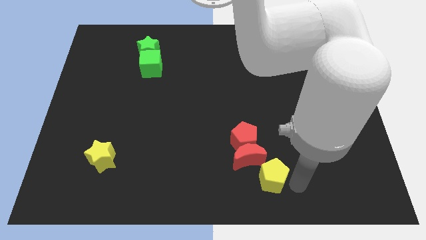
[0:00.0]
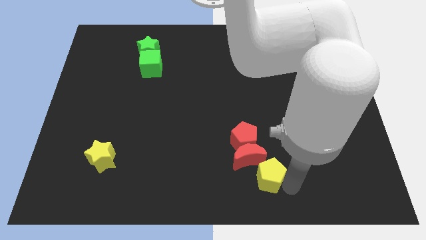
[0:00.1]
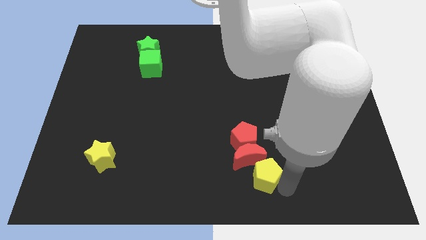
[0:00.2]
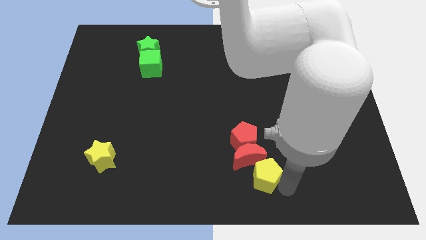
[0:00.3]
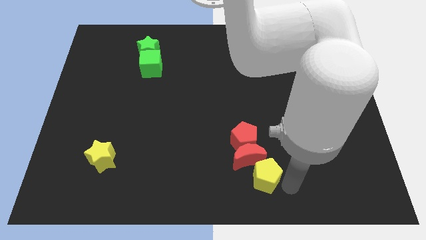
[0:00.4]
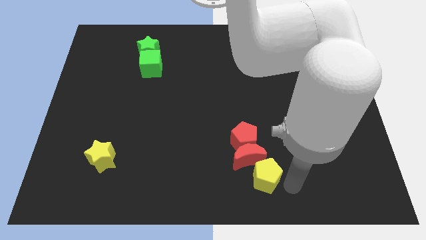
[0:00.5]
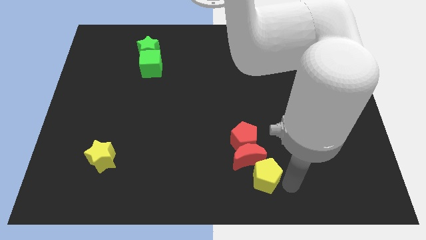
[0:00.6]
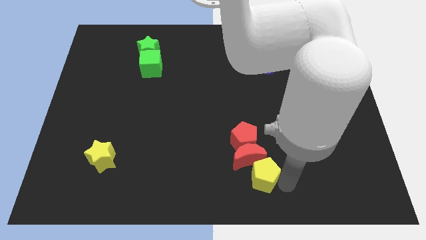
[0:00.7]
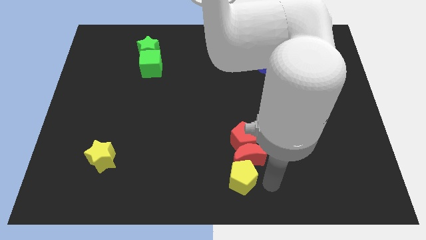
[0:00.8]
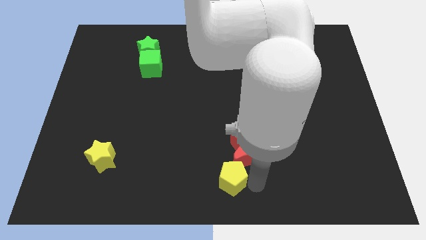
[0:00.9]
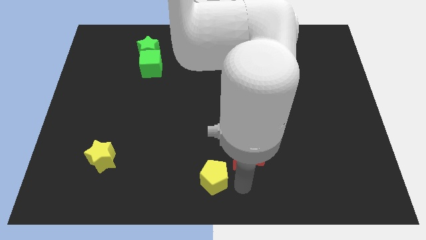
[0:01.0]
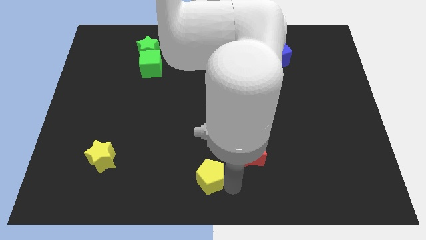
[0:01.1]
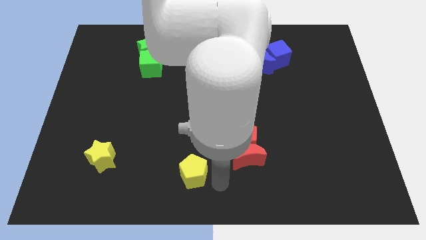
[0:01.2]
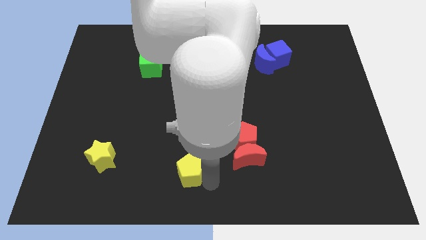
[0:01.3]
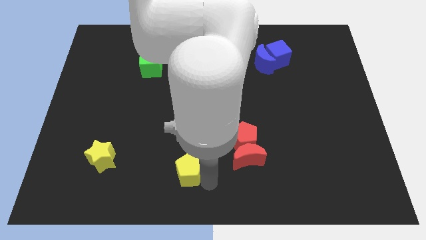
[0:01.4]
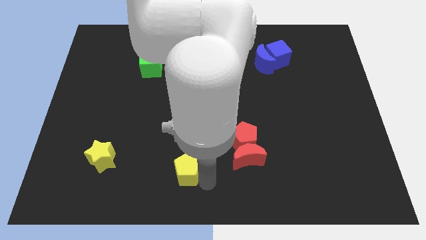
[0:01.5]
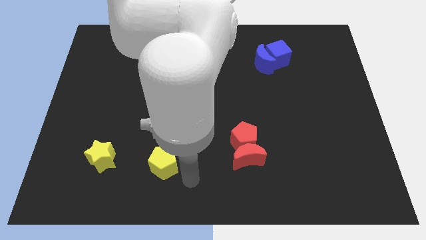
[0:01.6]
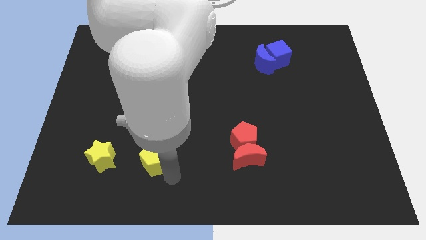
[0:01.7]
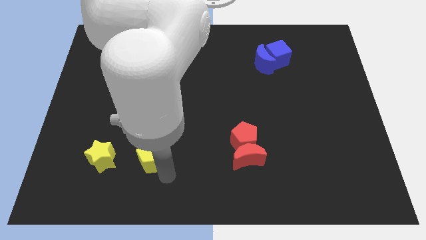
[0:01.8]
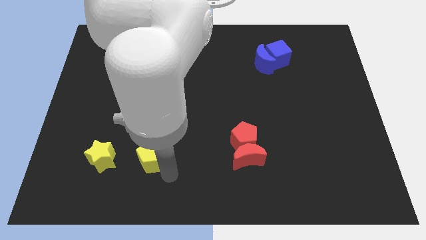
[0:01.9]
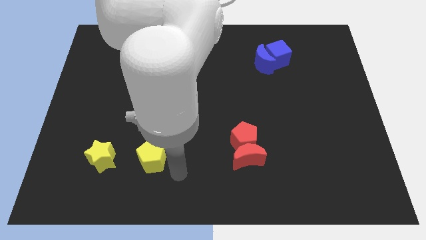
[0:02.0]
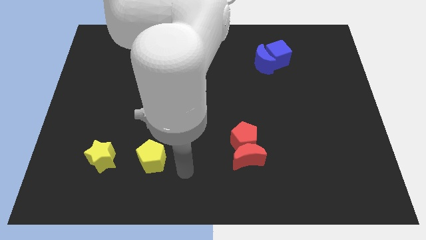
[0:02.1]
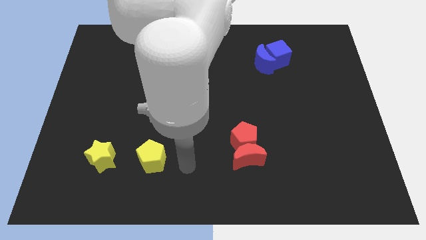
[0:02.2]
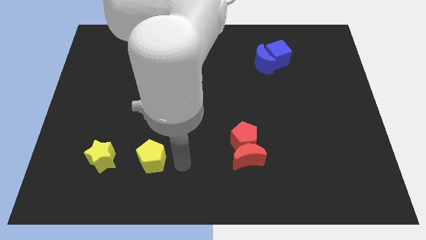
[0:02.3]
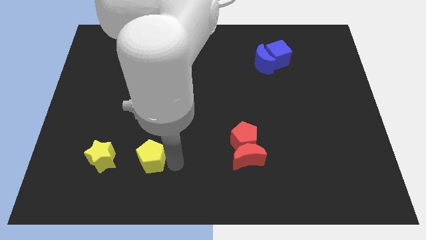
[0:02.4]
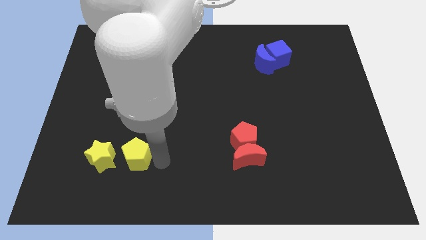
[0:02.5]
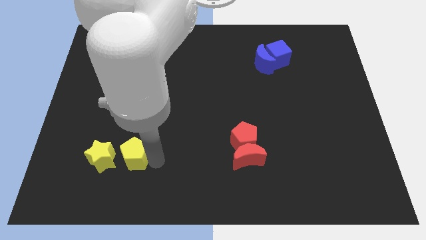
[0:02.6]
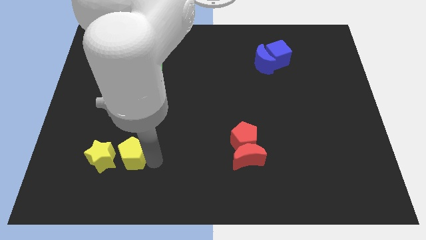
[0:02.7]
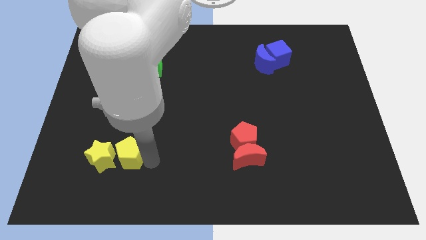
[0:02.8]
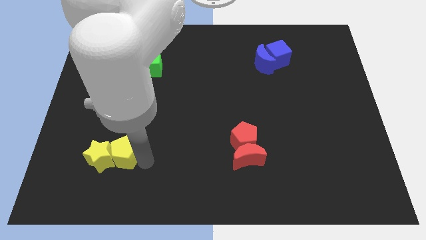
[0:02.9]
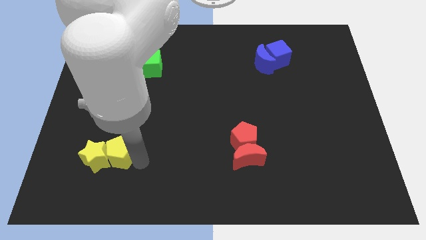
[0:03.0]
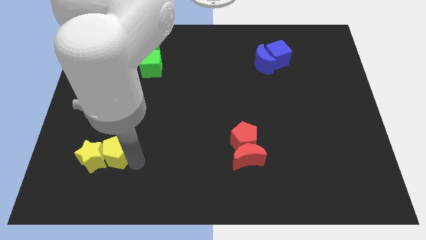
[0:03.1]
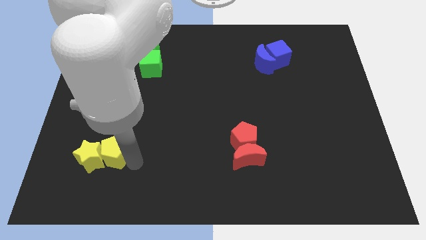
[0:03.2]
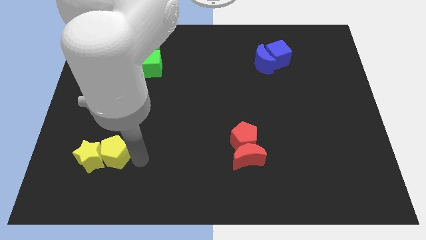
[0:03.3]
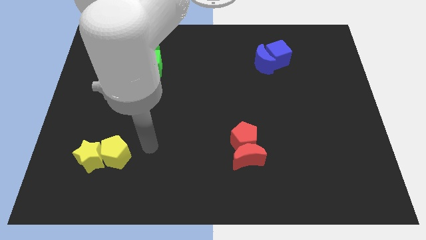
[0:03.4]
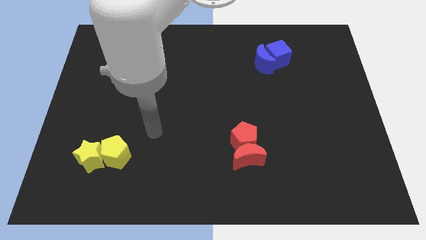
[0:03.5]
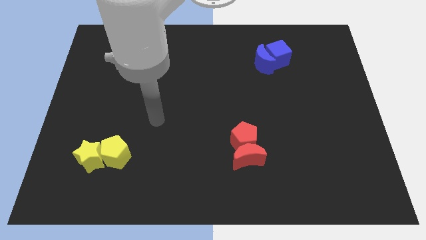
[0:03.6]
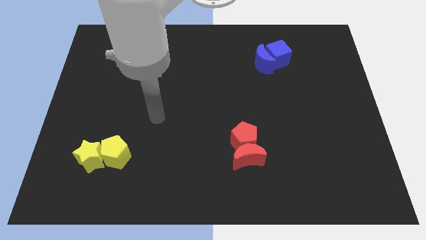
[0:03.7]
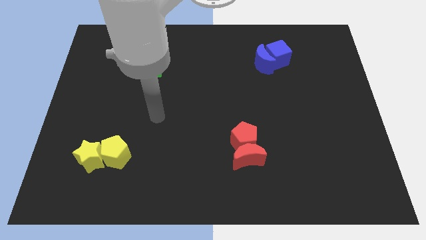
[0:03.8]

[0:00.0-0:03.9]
push the ywllow pentagon to the right side of the yellow star

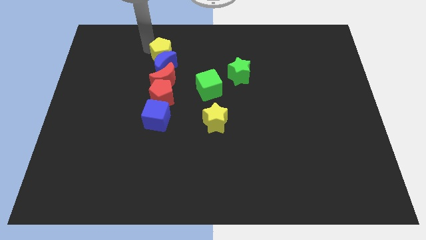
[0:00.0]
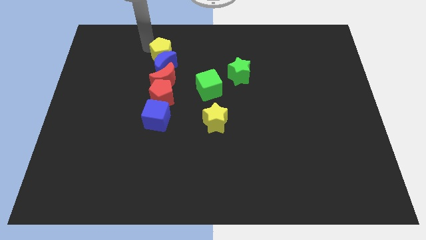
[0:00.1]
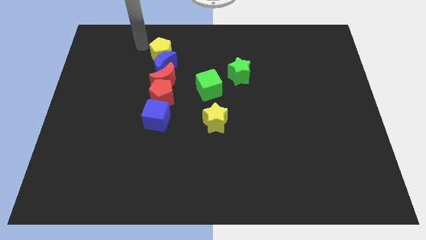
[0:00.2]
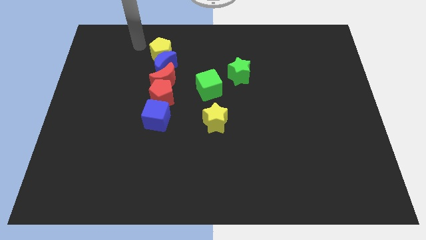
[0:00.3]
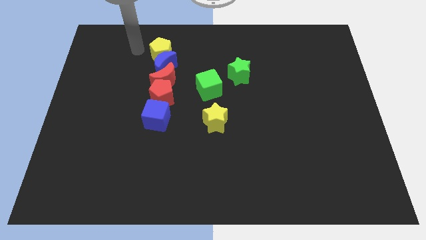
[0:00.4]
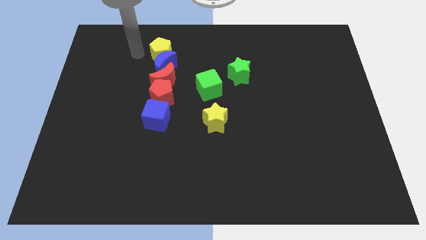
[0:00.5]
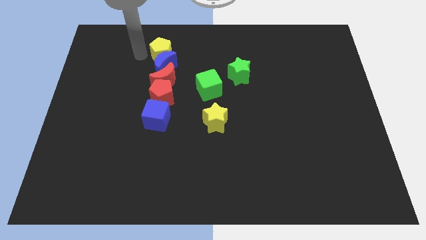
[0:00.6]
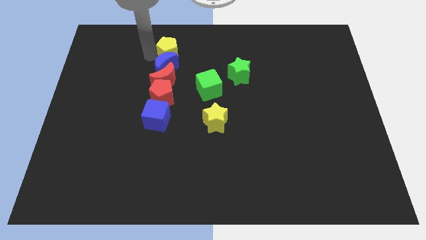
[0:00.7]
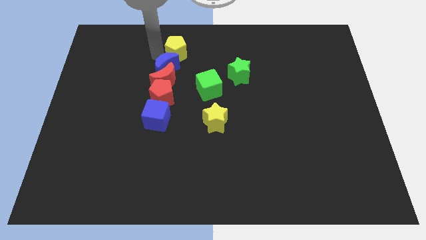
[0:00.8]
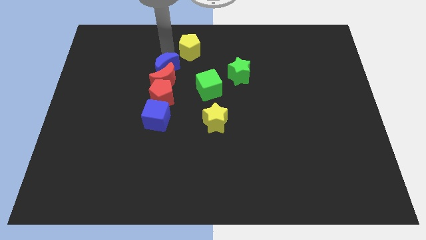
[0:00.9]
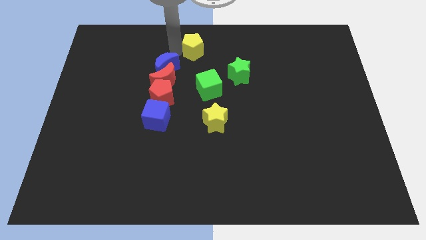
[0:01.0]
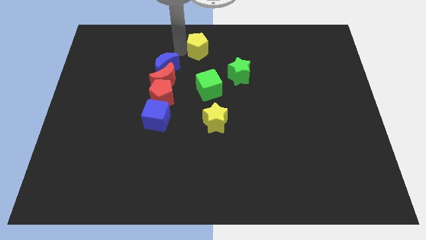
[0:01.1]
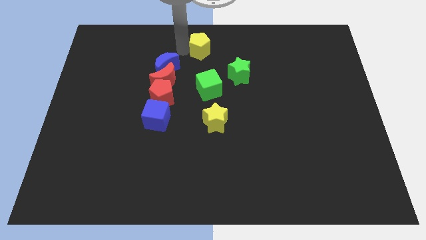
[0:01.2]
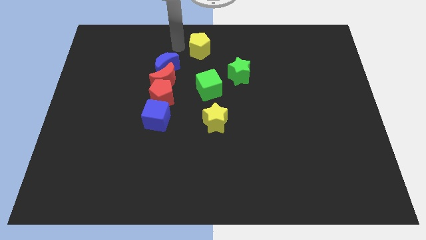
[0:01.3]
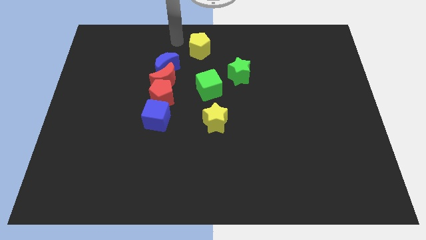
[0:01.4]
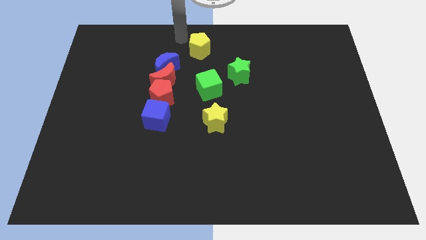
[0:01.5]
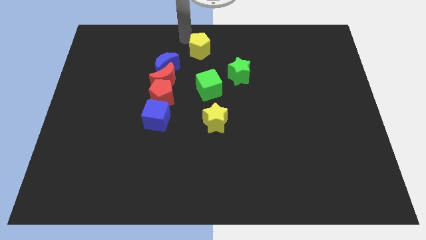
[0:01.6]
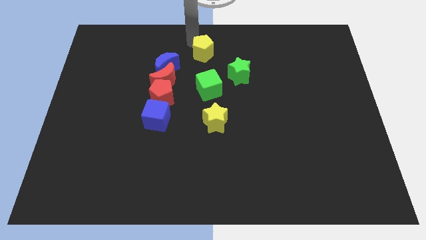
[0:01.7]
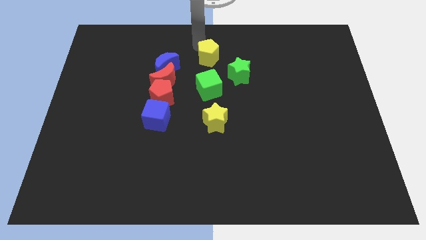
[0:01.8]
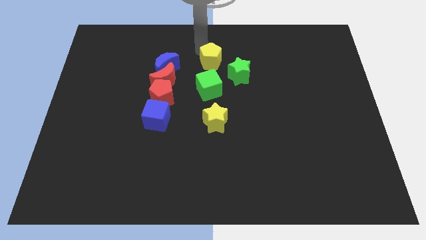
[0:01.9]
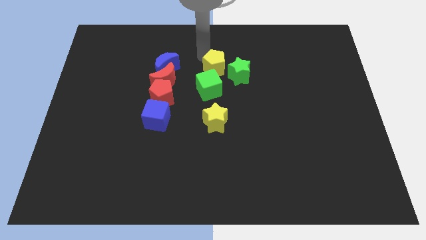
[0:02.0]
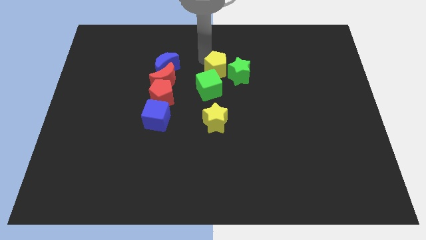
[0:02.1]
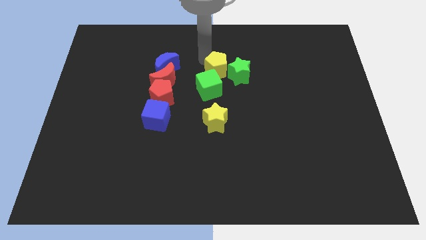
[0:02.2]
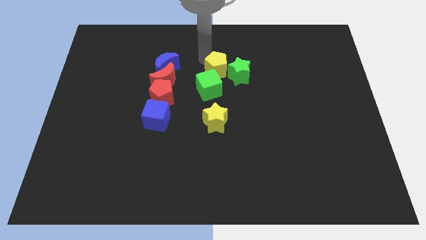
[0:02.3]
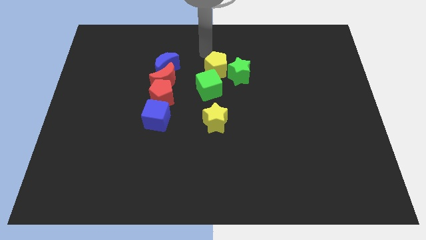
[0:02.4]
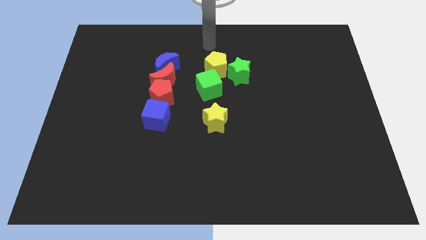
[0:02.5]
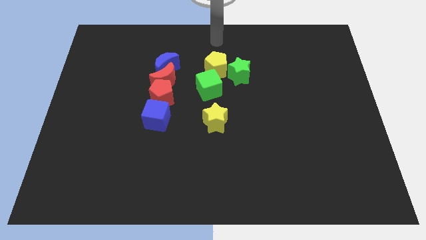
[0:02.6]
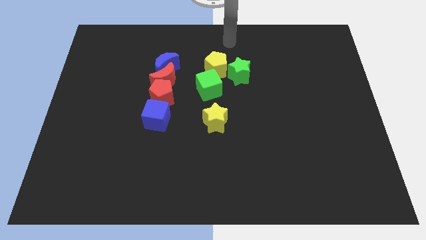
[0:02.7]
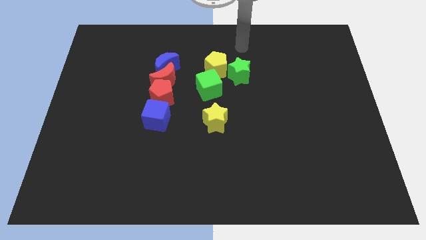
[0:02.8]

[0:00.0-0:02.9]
place the yellow pentagon near the green cube

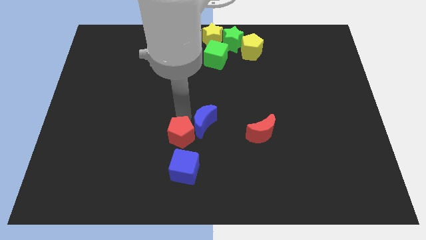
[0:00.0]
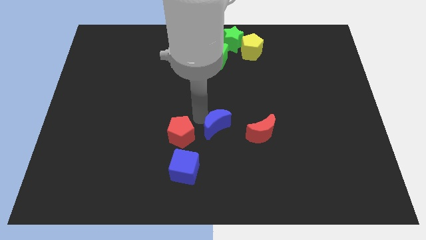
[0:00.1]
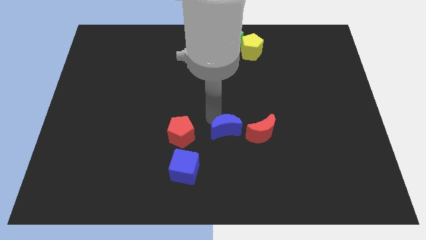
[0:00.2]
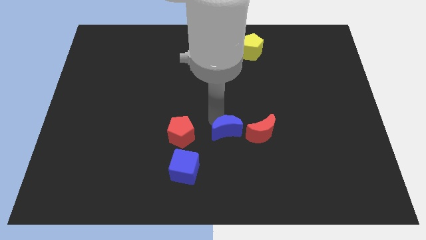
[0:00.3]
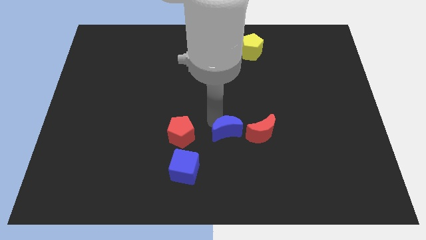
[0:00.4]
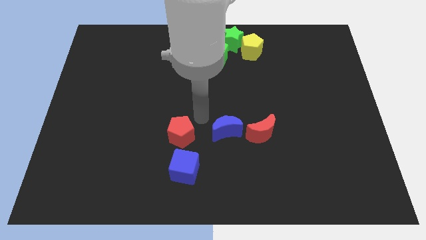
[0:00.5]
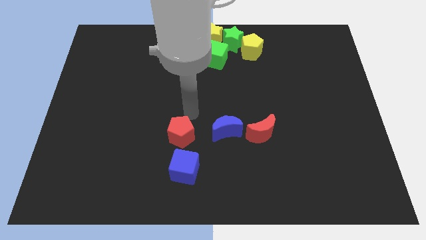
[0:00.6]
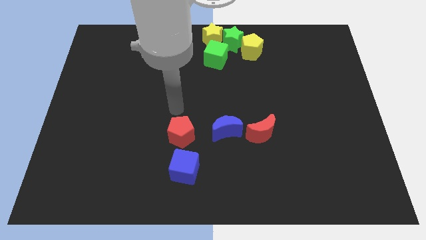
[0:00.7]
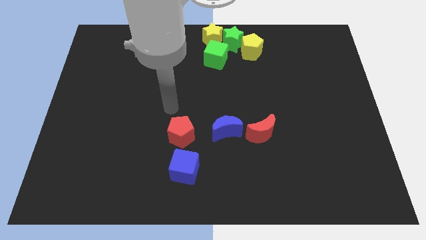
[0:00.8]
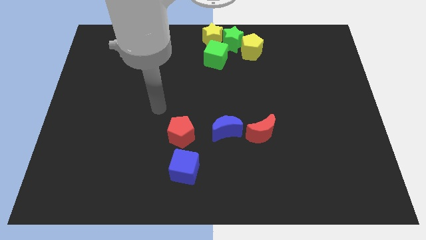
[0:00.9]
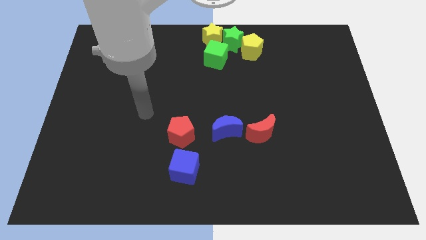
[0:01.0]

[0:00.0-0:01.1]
move the blue crescent to the left of the red crescent

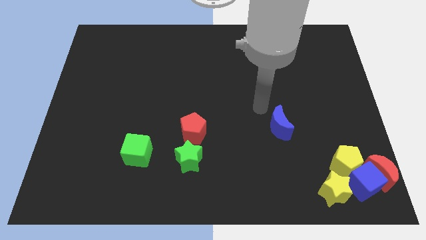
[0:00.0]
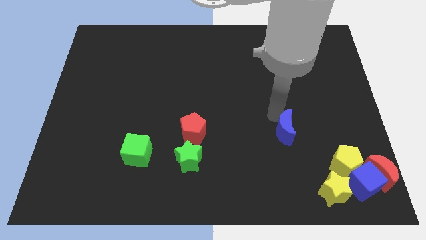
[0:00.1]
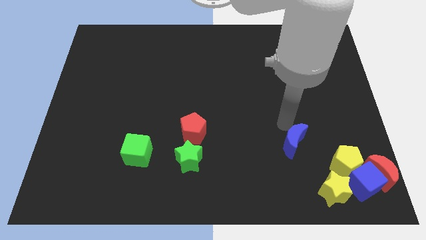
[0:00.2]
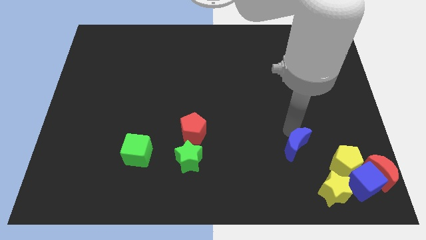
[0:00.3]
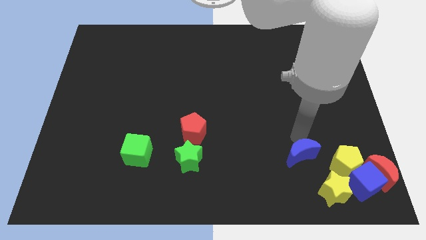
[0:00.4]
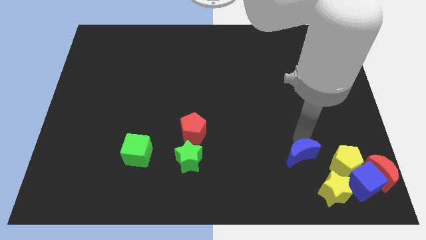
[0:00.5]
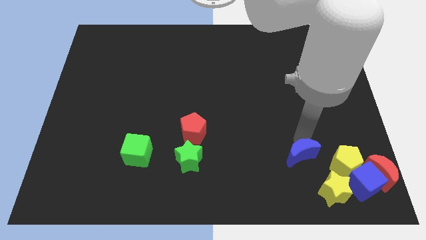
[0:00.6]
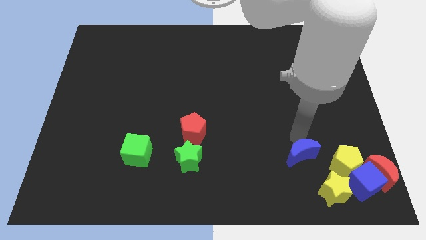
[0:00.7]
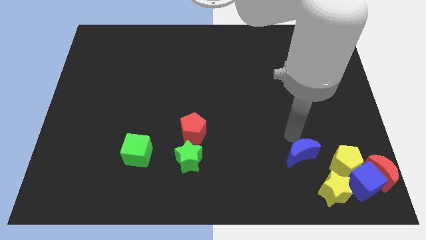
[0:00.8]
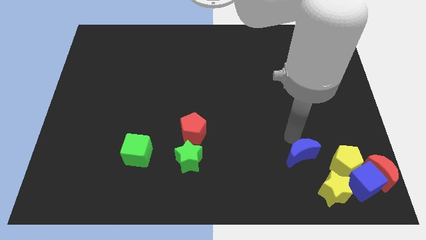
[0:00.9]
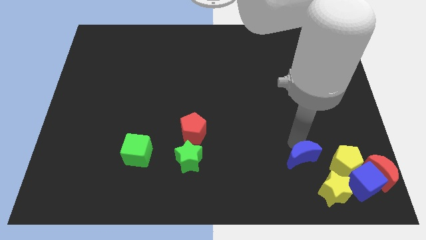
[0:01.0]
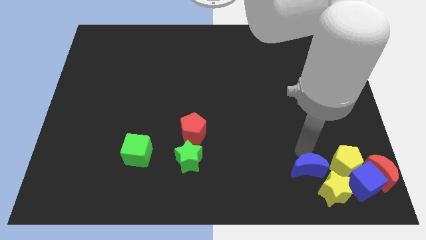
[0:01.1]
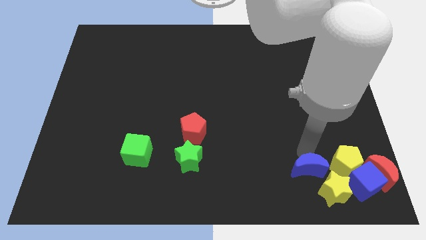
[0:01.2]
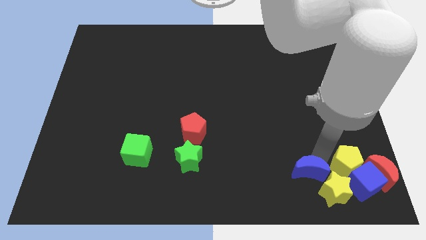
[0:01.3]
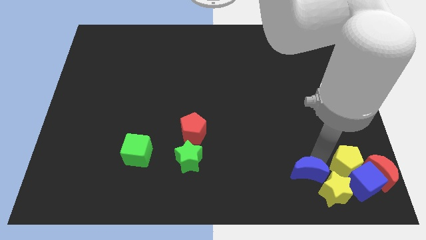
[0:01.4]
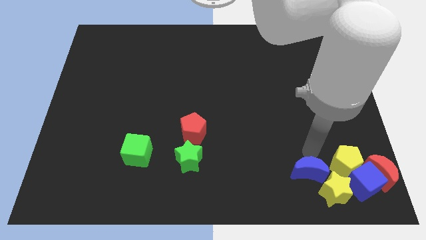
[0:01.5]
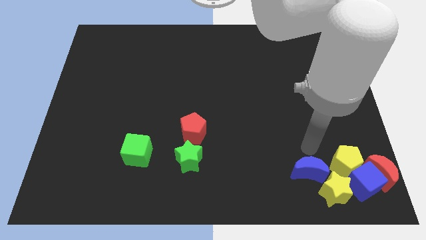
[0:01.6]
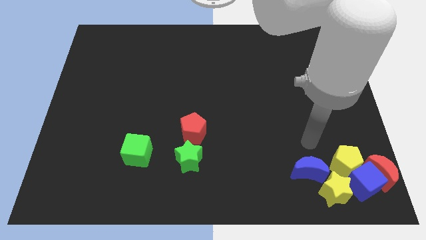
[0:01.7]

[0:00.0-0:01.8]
move the blue crescent close to the yellow star
